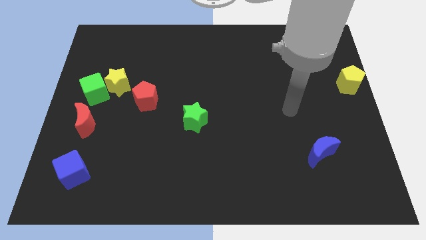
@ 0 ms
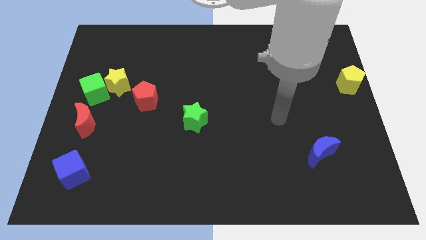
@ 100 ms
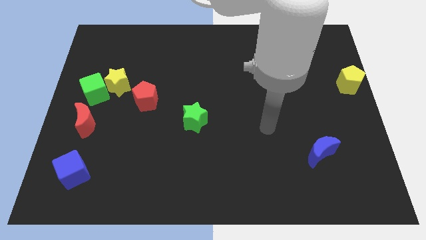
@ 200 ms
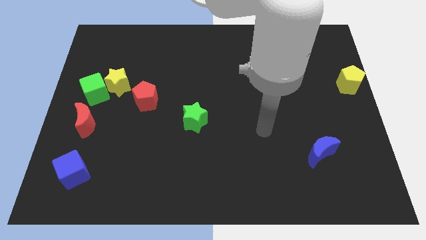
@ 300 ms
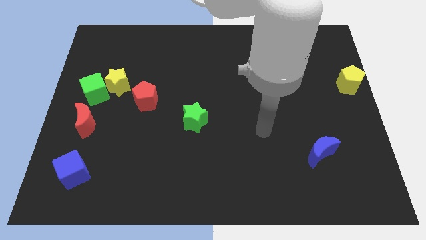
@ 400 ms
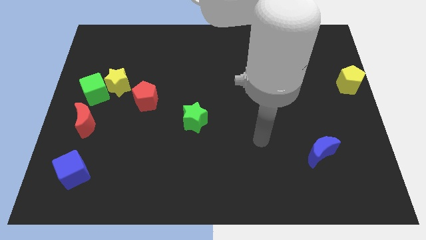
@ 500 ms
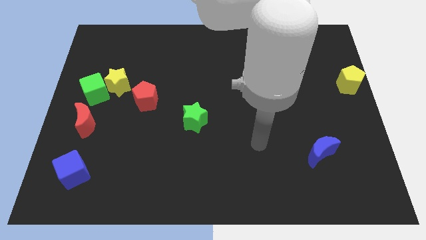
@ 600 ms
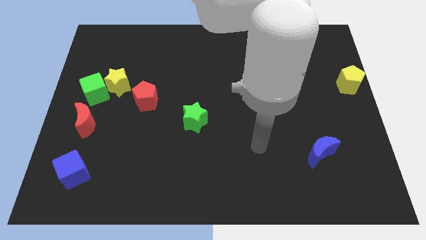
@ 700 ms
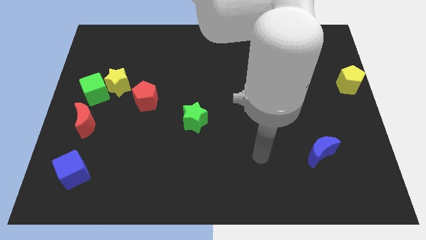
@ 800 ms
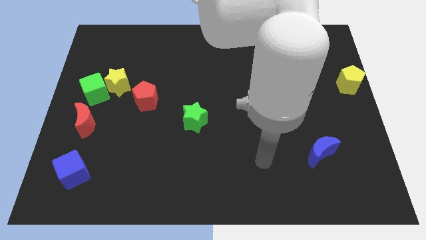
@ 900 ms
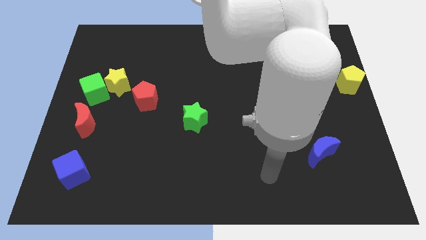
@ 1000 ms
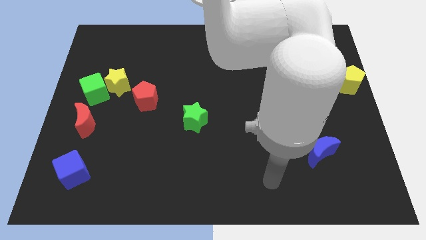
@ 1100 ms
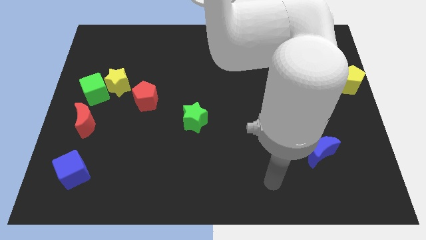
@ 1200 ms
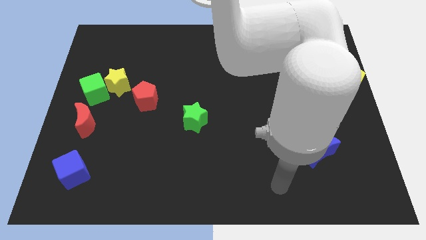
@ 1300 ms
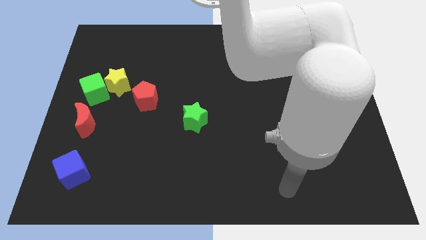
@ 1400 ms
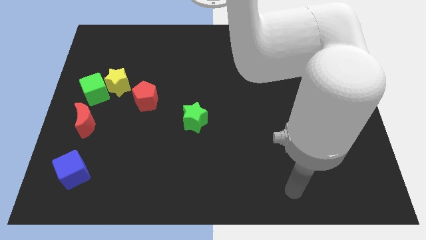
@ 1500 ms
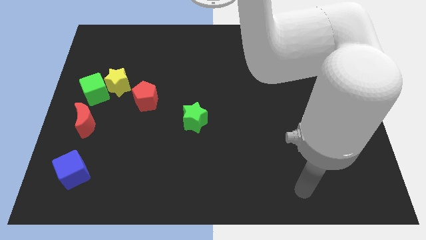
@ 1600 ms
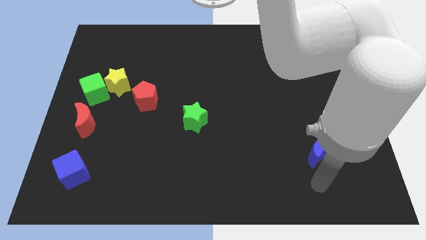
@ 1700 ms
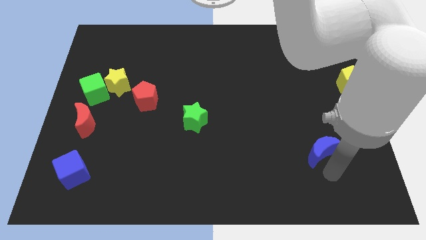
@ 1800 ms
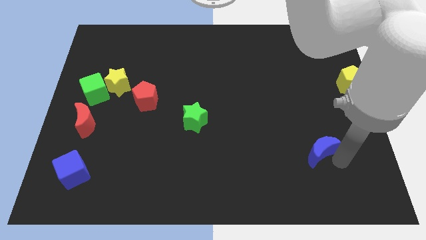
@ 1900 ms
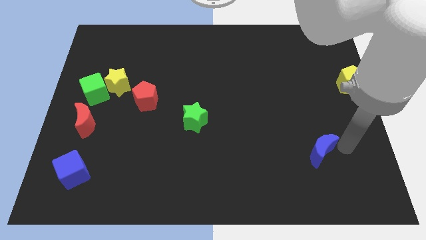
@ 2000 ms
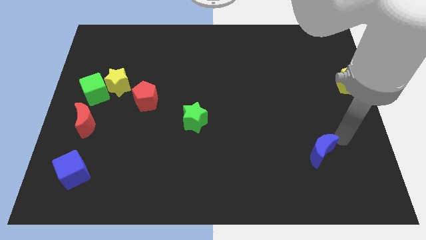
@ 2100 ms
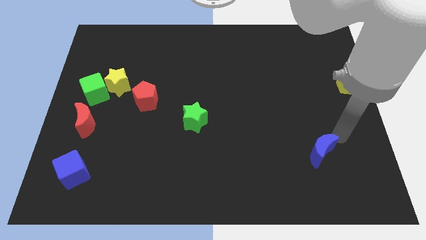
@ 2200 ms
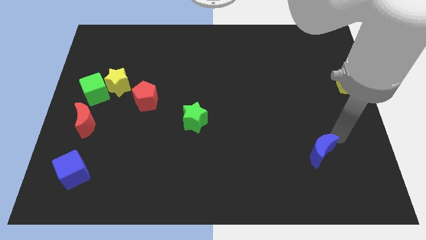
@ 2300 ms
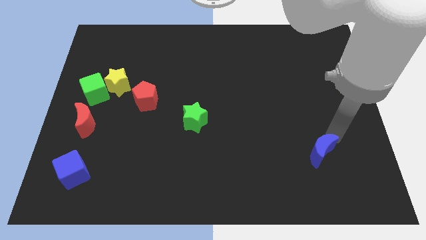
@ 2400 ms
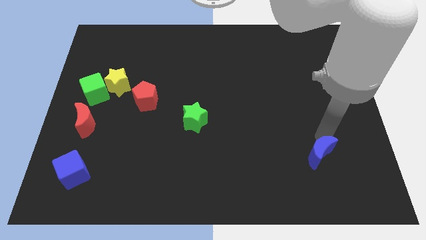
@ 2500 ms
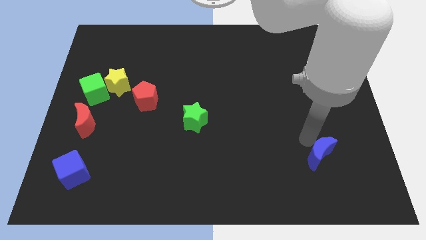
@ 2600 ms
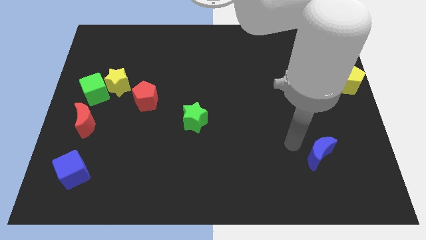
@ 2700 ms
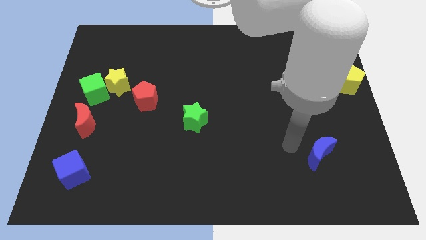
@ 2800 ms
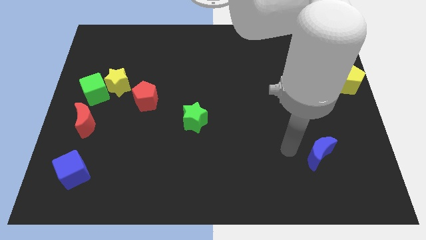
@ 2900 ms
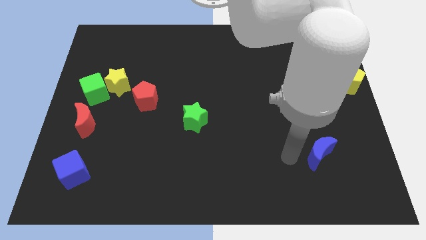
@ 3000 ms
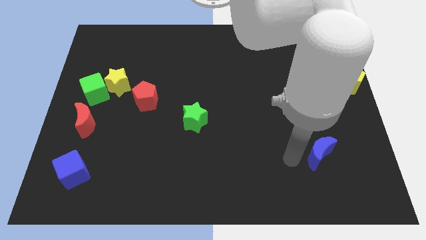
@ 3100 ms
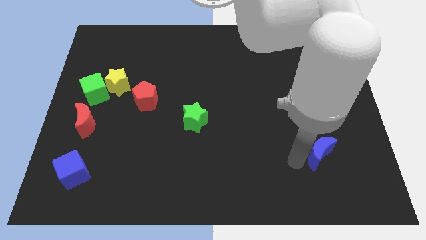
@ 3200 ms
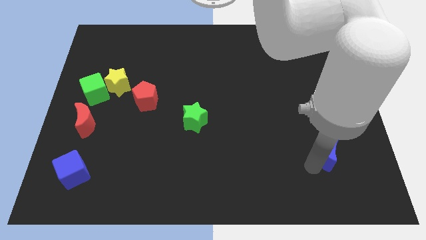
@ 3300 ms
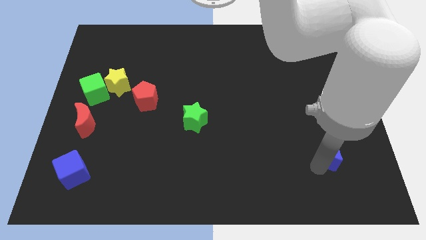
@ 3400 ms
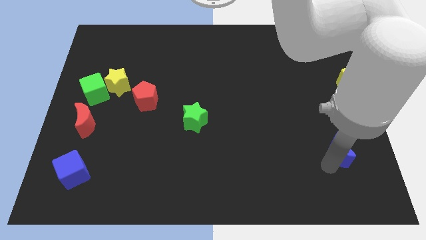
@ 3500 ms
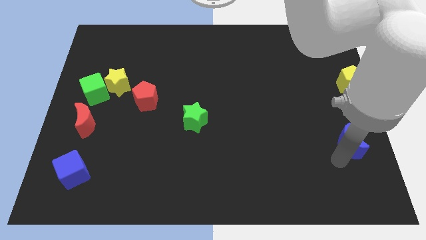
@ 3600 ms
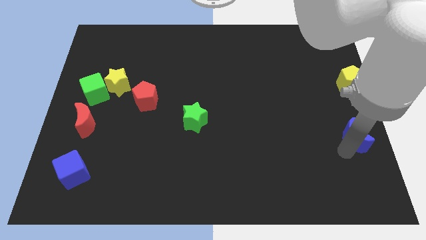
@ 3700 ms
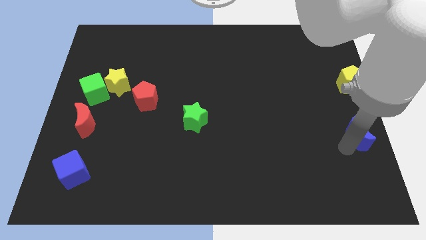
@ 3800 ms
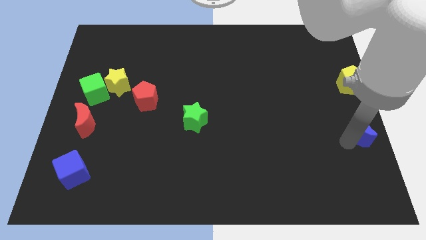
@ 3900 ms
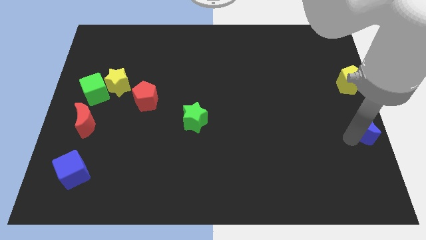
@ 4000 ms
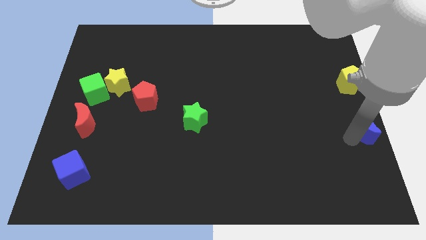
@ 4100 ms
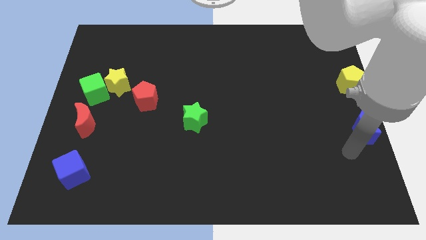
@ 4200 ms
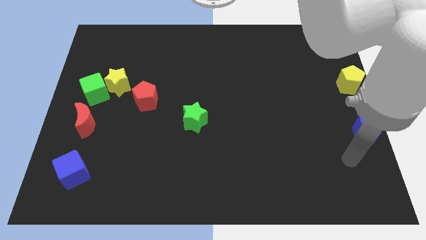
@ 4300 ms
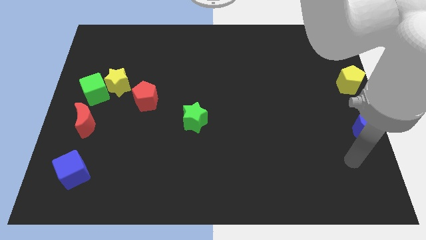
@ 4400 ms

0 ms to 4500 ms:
place blue moon to the bottom of yellow pentagon

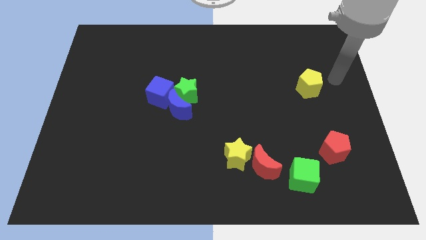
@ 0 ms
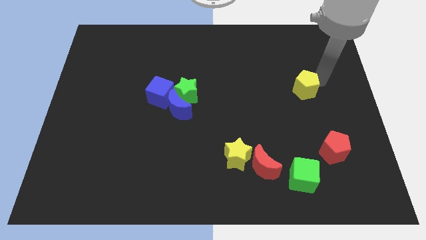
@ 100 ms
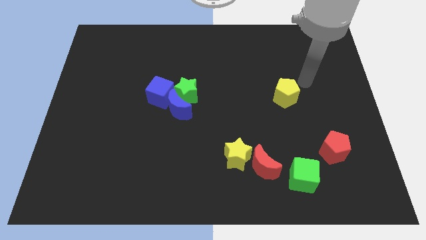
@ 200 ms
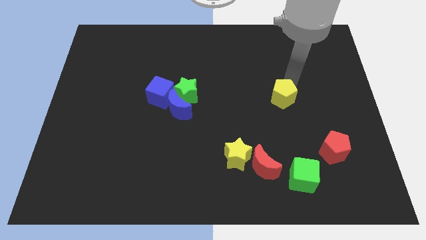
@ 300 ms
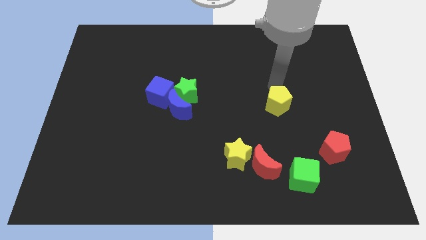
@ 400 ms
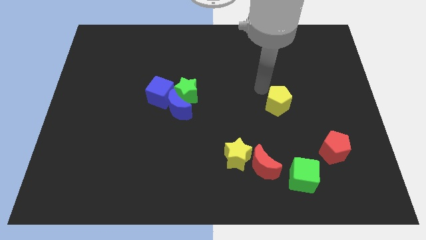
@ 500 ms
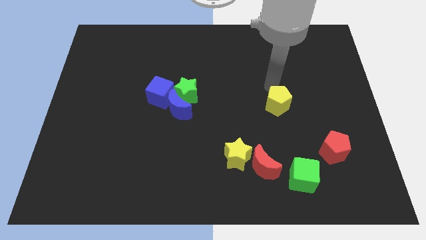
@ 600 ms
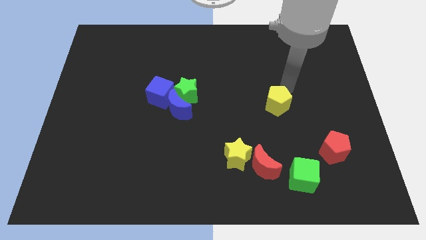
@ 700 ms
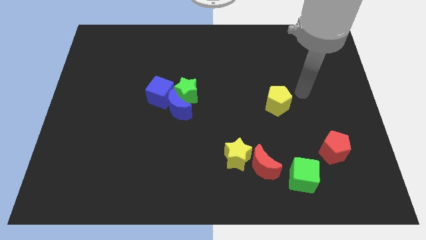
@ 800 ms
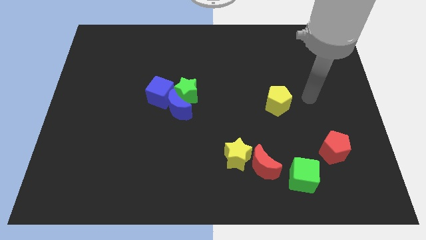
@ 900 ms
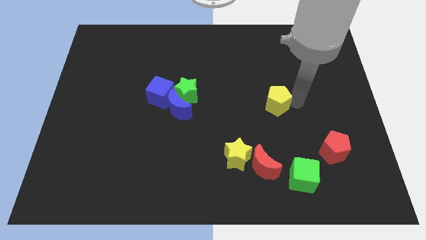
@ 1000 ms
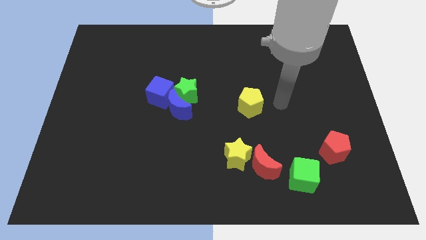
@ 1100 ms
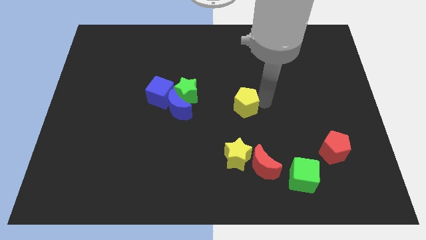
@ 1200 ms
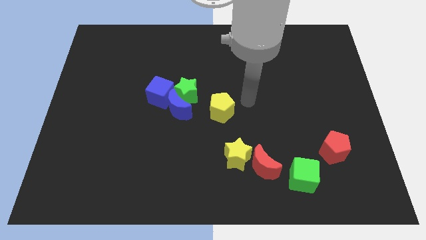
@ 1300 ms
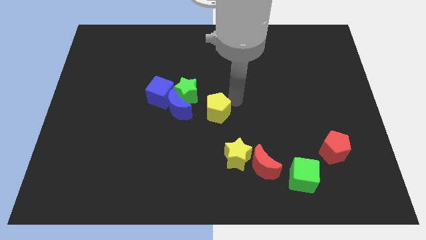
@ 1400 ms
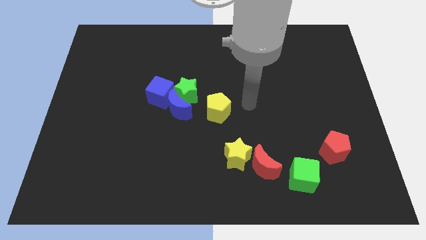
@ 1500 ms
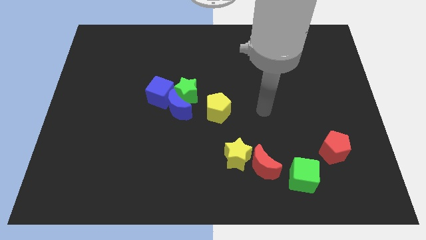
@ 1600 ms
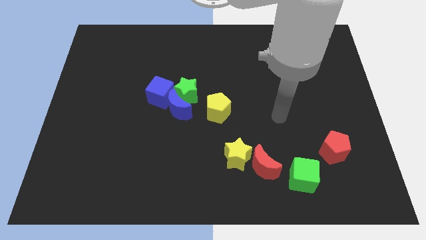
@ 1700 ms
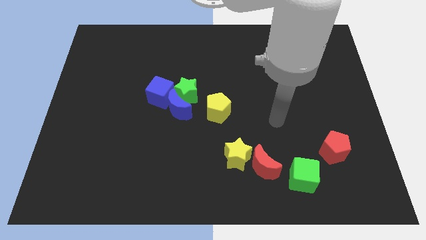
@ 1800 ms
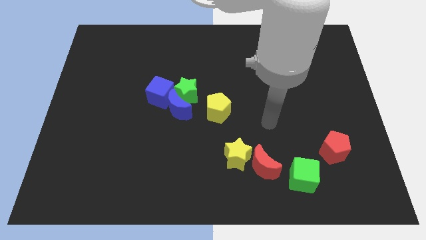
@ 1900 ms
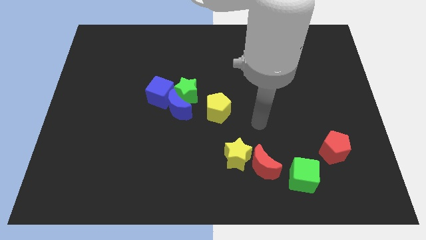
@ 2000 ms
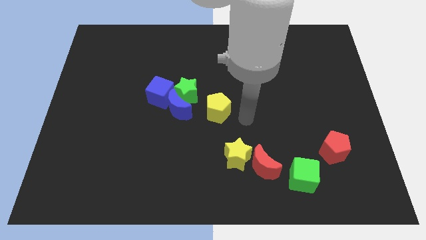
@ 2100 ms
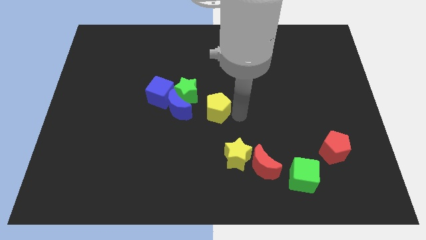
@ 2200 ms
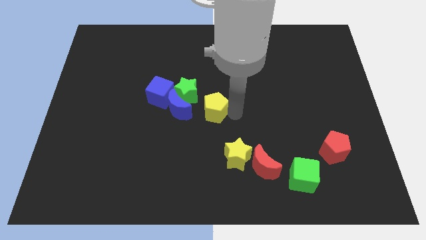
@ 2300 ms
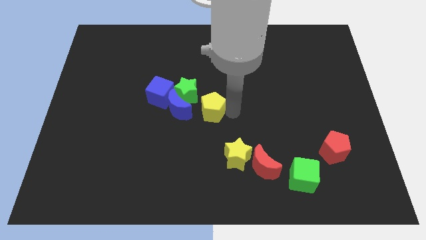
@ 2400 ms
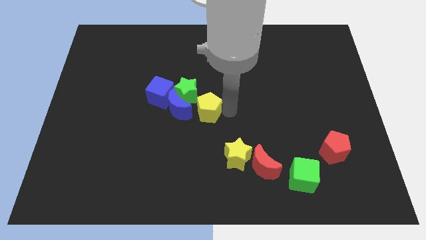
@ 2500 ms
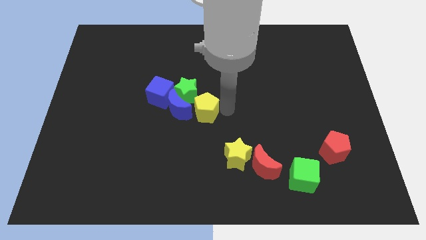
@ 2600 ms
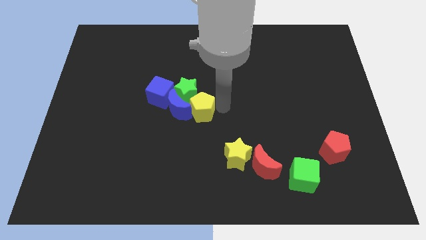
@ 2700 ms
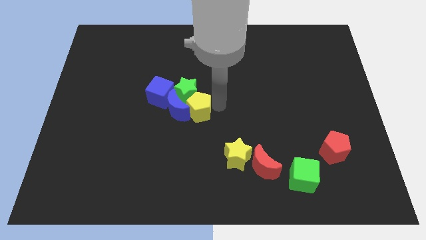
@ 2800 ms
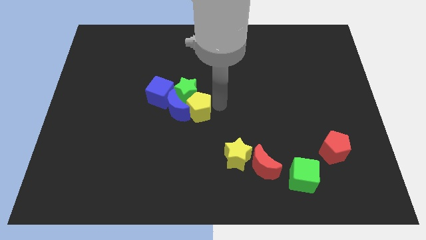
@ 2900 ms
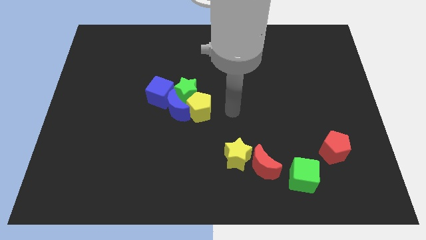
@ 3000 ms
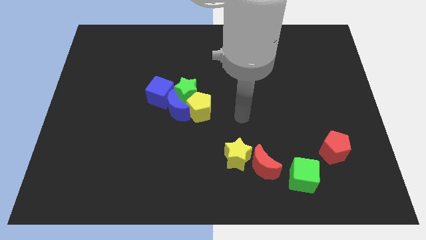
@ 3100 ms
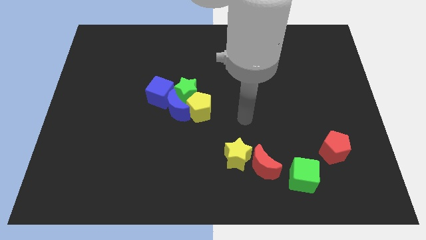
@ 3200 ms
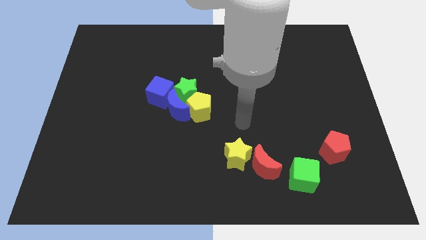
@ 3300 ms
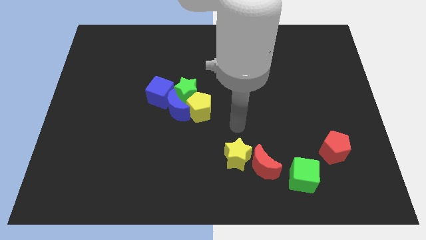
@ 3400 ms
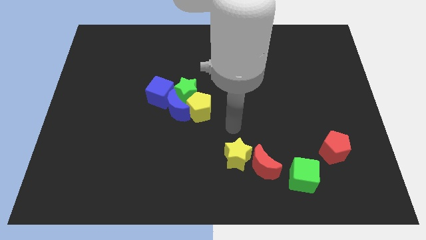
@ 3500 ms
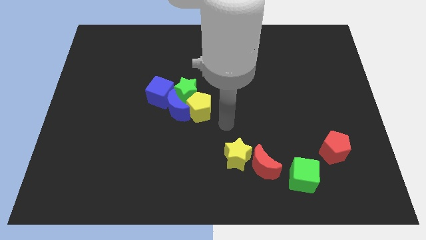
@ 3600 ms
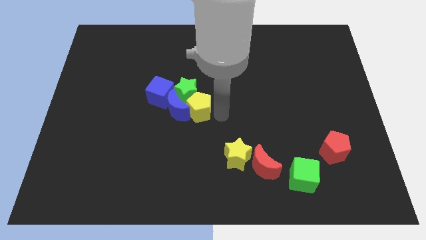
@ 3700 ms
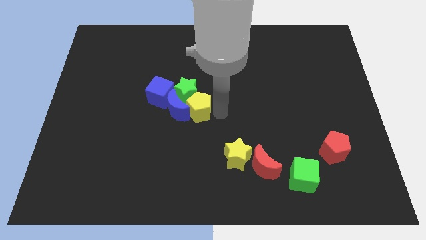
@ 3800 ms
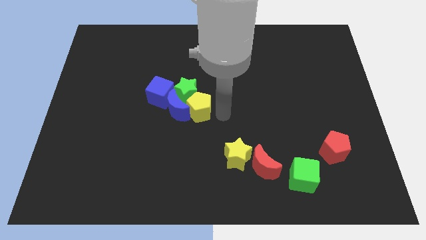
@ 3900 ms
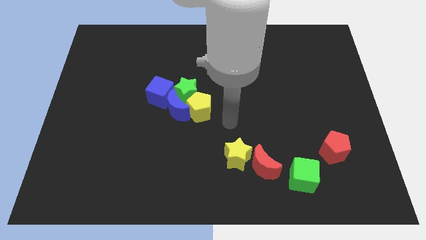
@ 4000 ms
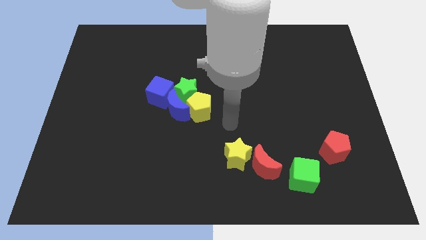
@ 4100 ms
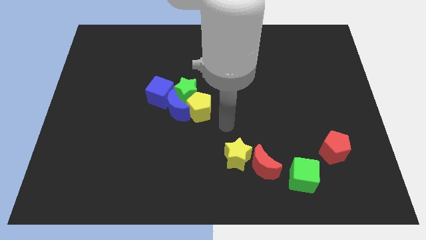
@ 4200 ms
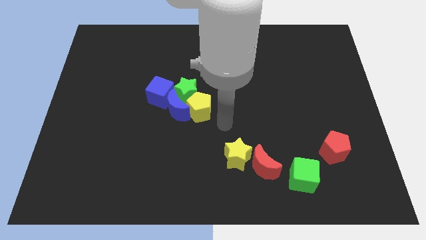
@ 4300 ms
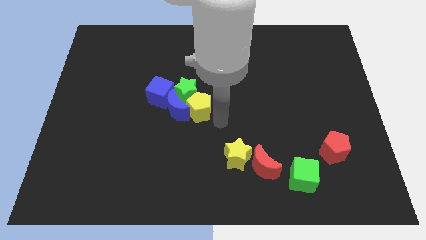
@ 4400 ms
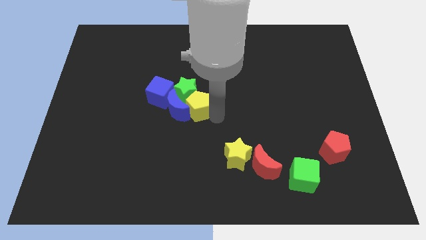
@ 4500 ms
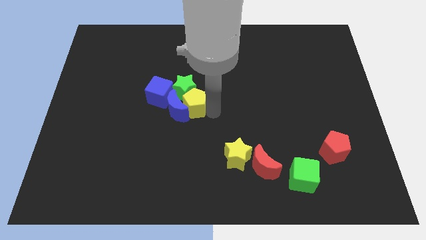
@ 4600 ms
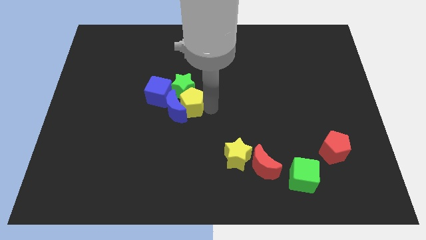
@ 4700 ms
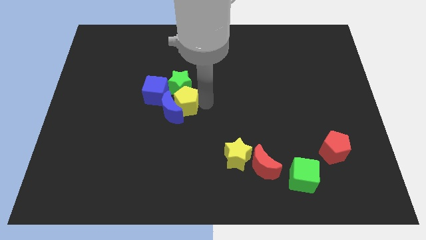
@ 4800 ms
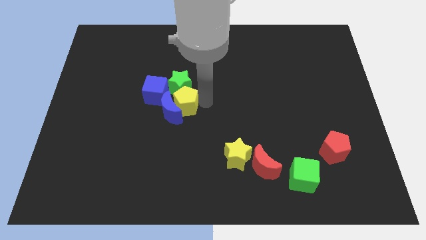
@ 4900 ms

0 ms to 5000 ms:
move the yellow pentagon to the bottom of the green star
